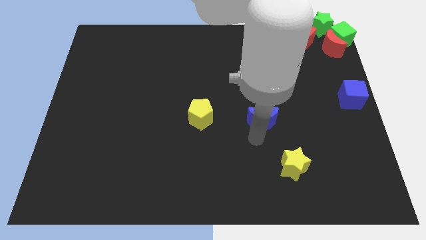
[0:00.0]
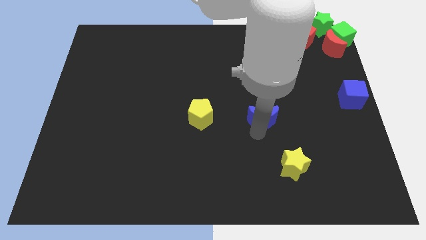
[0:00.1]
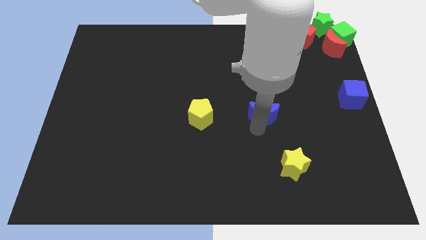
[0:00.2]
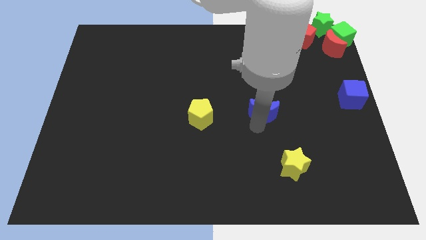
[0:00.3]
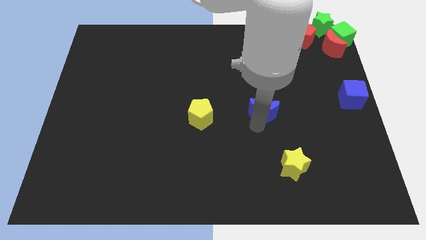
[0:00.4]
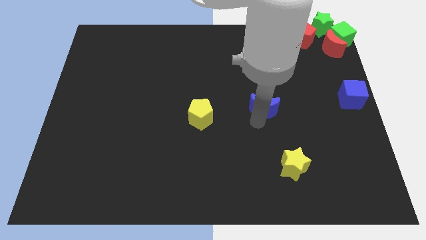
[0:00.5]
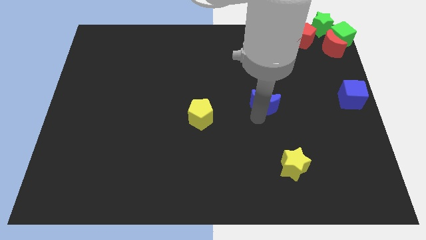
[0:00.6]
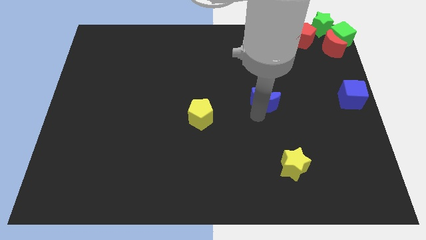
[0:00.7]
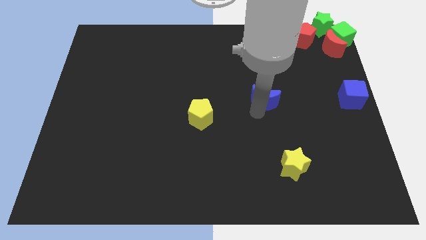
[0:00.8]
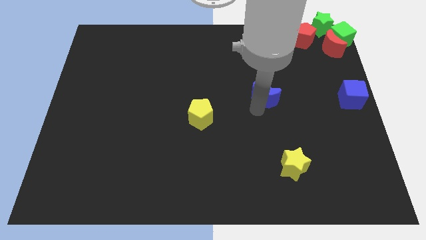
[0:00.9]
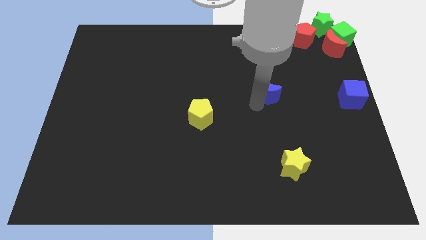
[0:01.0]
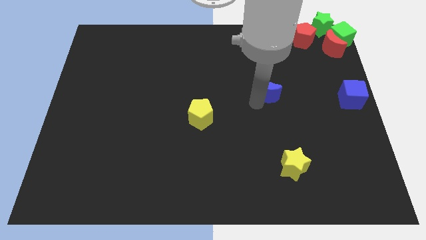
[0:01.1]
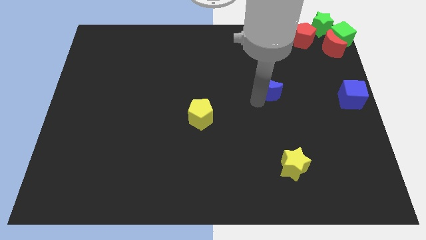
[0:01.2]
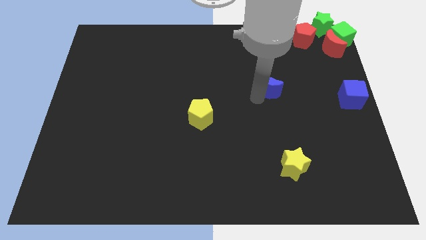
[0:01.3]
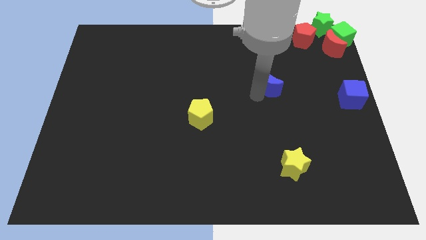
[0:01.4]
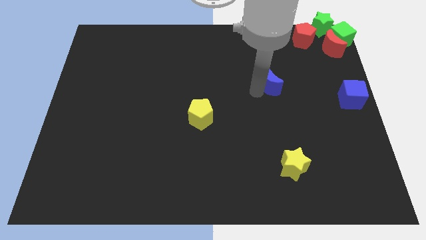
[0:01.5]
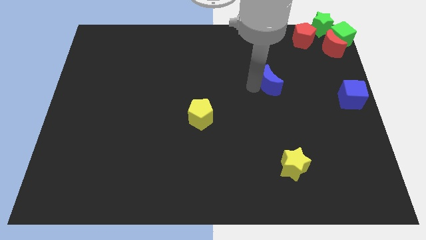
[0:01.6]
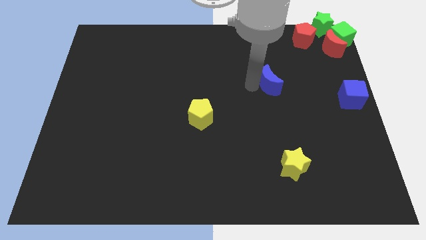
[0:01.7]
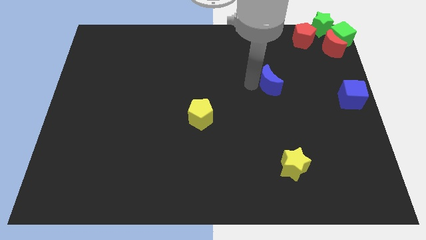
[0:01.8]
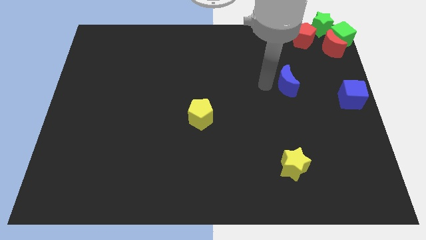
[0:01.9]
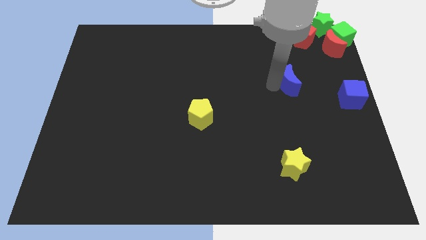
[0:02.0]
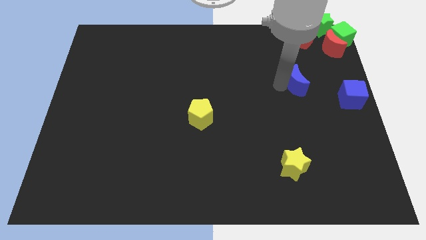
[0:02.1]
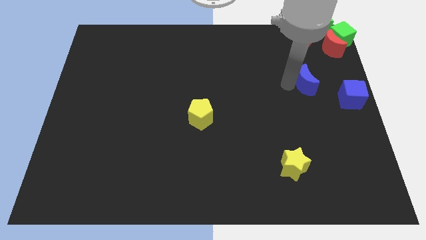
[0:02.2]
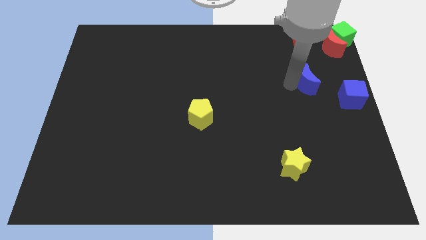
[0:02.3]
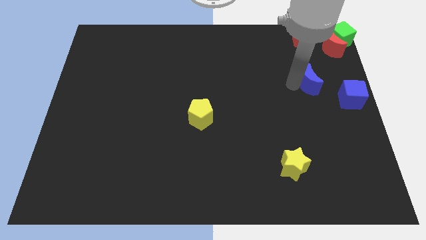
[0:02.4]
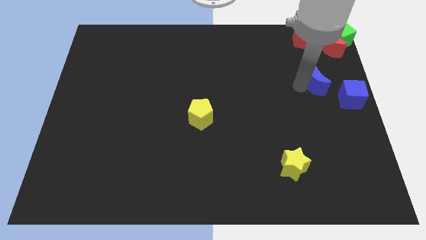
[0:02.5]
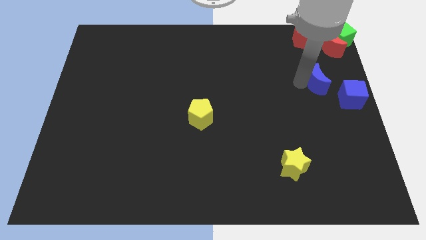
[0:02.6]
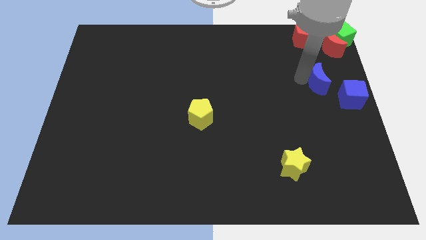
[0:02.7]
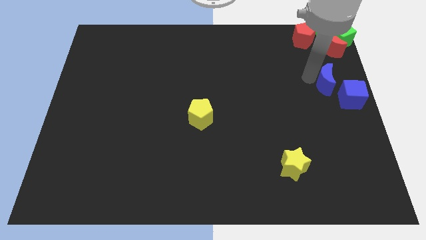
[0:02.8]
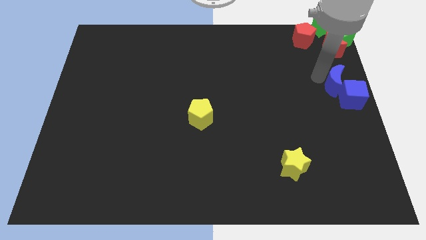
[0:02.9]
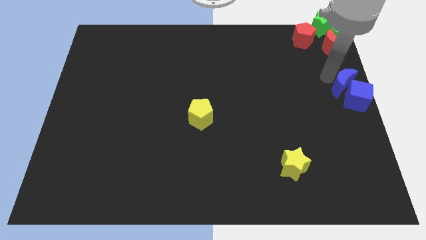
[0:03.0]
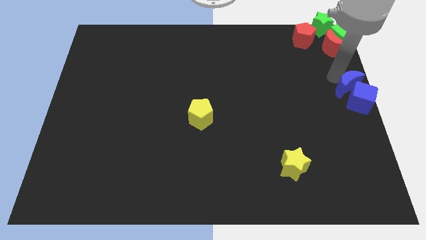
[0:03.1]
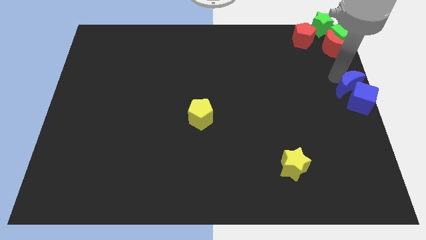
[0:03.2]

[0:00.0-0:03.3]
place blue crescent above the blue cube

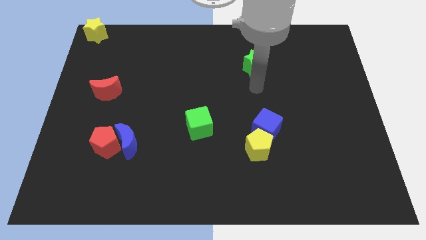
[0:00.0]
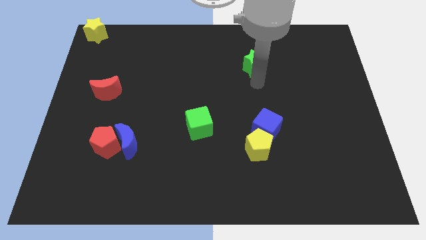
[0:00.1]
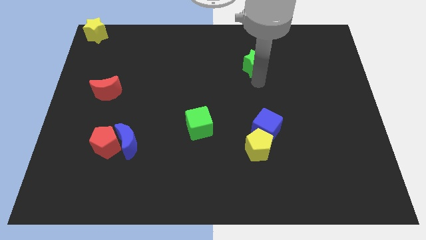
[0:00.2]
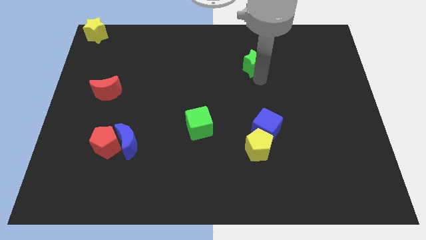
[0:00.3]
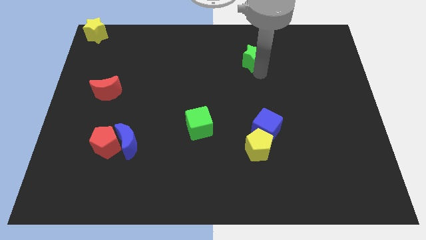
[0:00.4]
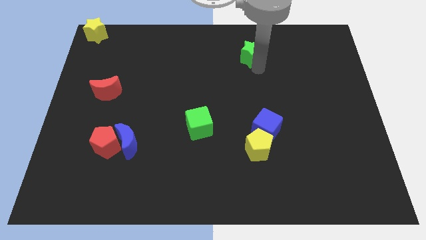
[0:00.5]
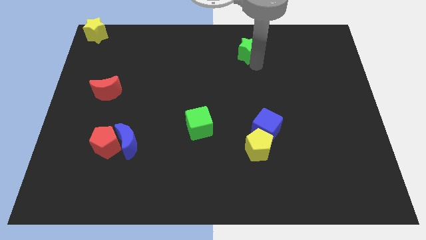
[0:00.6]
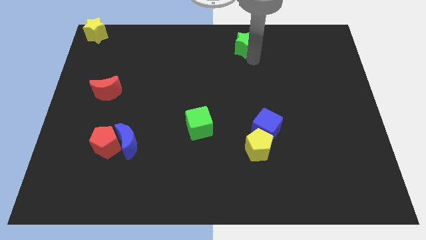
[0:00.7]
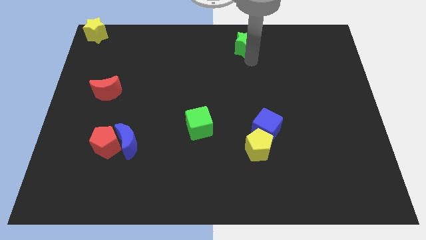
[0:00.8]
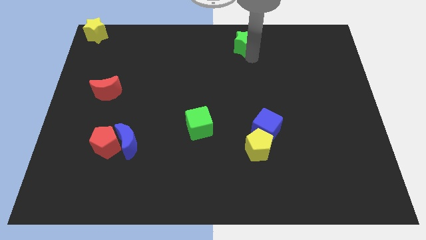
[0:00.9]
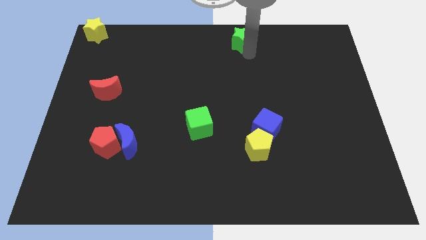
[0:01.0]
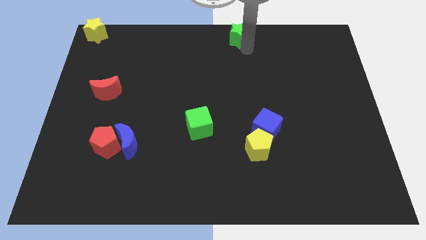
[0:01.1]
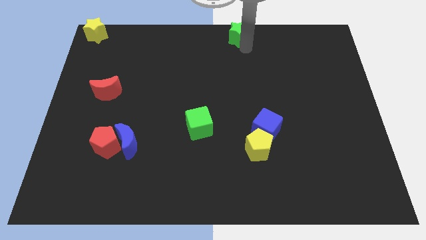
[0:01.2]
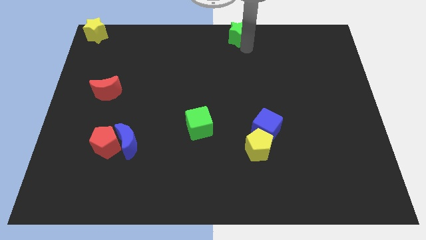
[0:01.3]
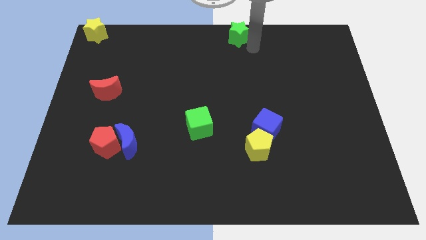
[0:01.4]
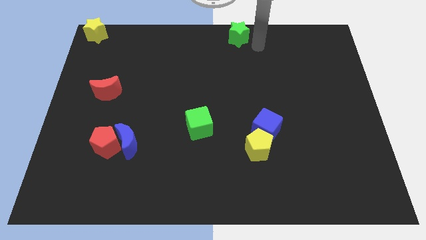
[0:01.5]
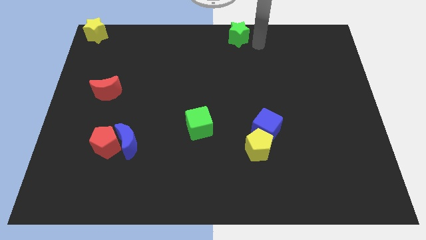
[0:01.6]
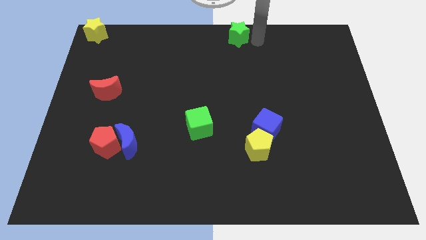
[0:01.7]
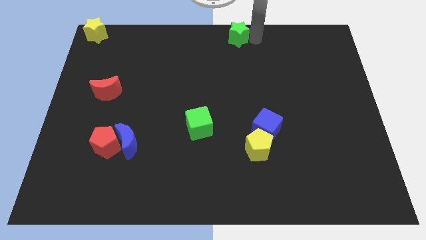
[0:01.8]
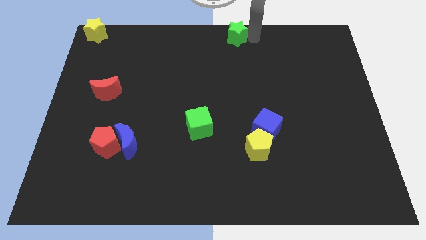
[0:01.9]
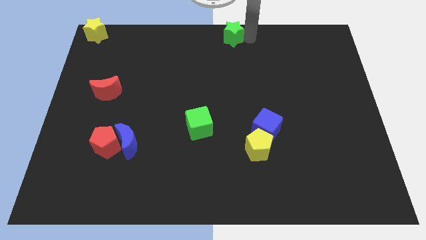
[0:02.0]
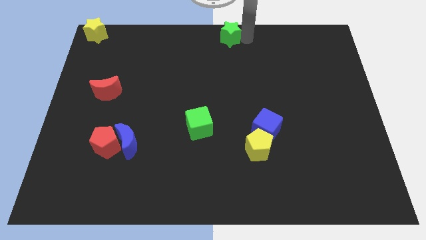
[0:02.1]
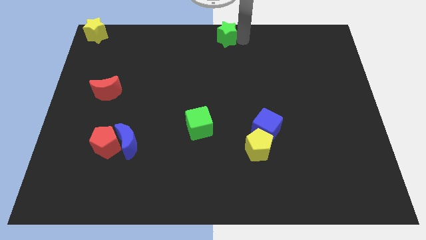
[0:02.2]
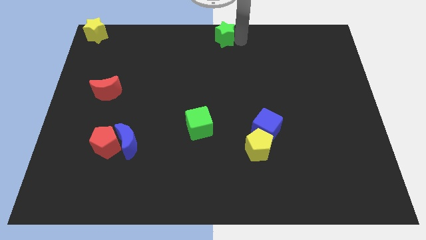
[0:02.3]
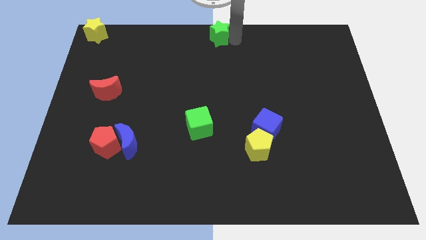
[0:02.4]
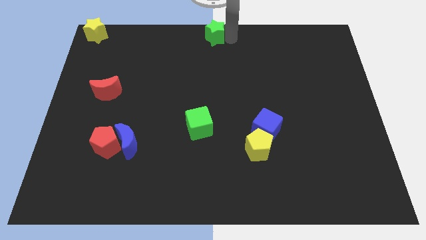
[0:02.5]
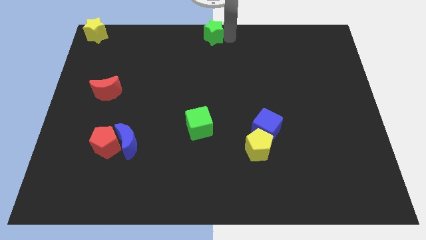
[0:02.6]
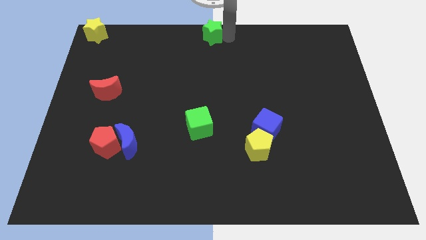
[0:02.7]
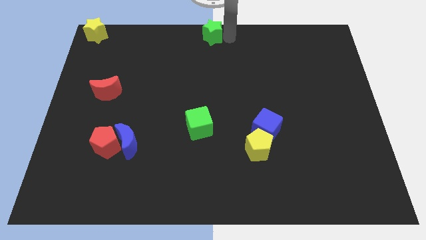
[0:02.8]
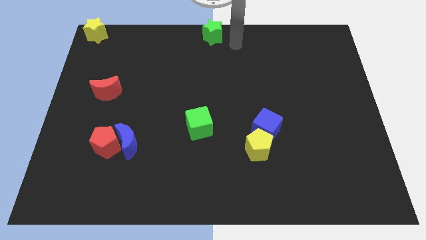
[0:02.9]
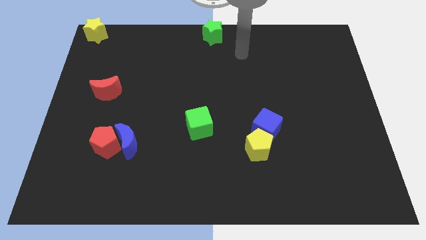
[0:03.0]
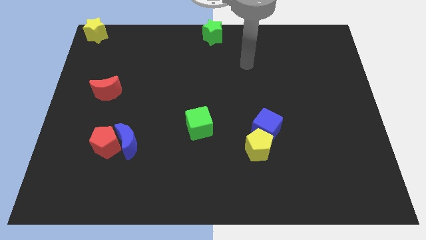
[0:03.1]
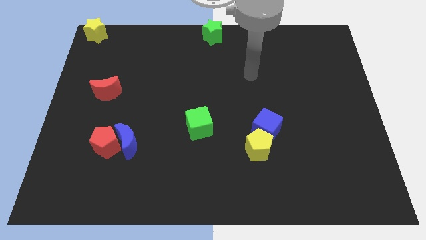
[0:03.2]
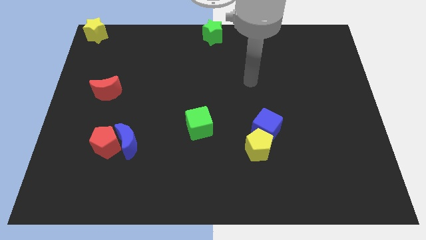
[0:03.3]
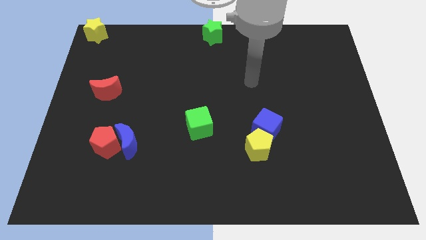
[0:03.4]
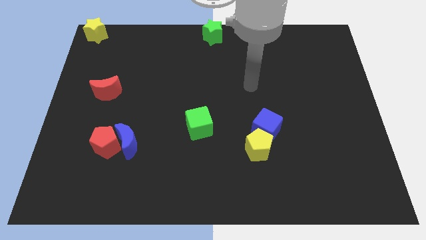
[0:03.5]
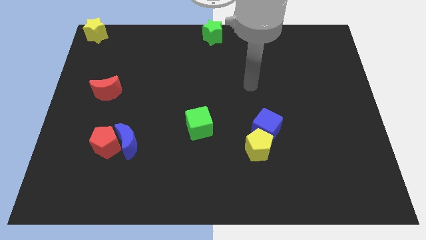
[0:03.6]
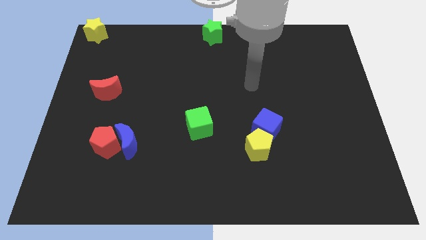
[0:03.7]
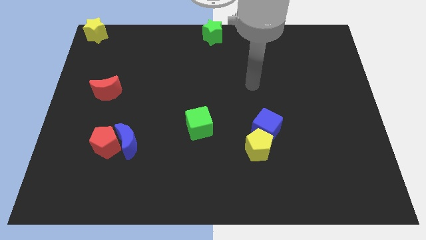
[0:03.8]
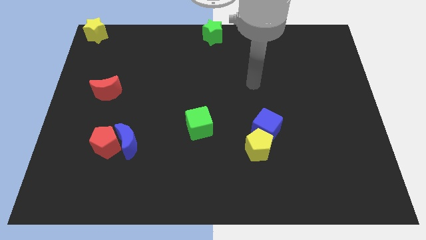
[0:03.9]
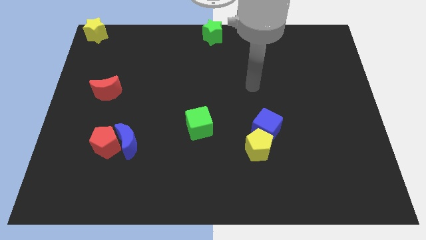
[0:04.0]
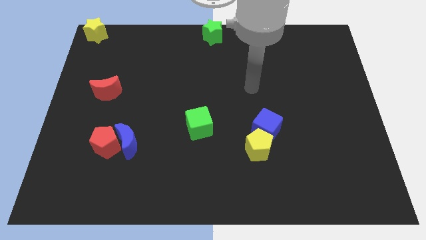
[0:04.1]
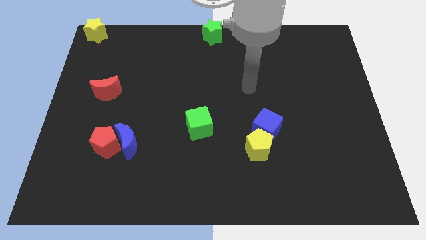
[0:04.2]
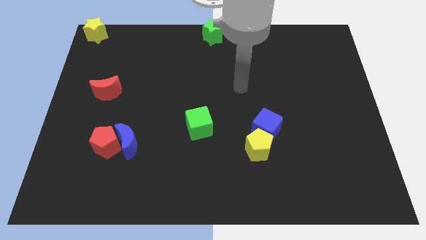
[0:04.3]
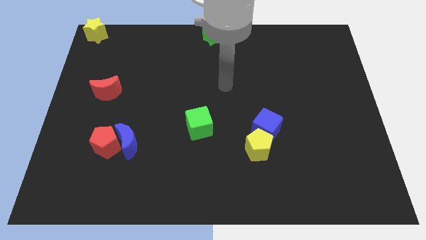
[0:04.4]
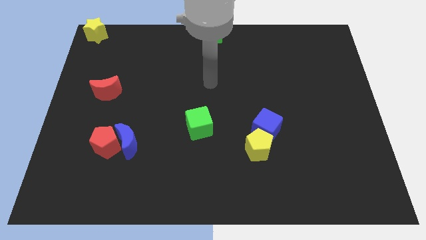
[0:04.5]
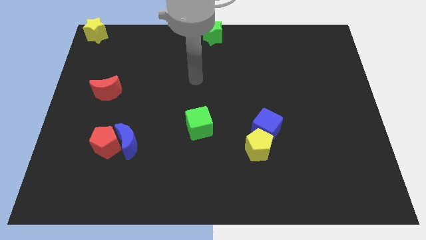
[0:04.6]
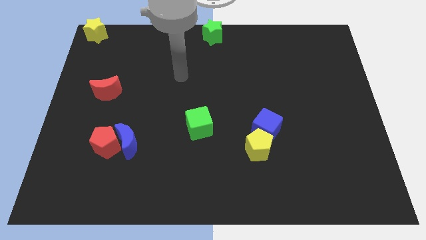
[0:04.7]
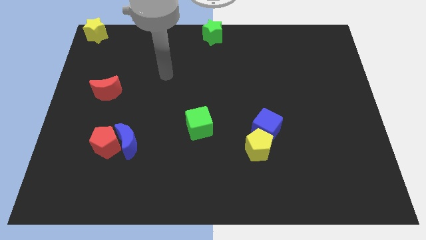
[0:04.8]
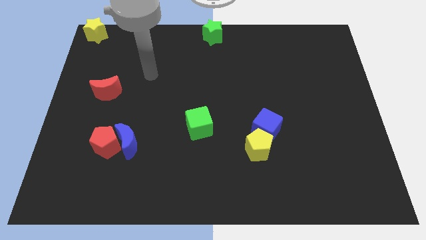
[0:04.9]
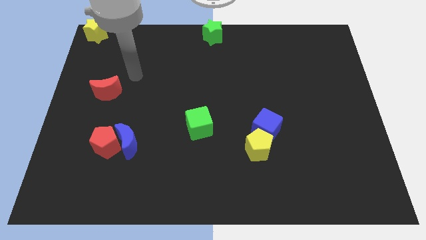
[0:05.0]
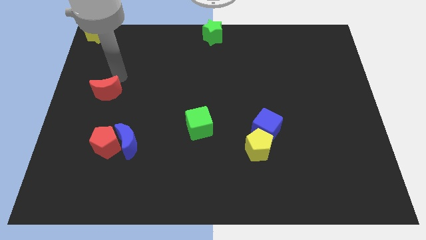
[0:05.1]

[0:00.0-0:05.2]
place the green star at the top center of the board

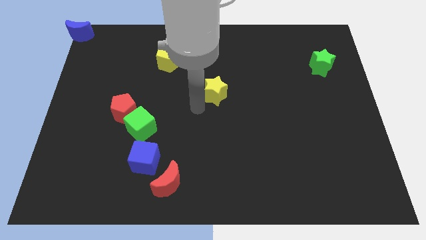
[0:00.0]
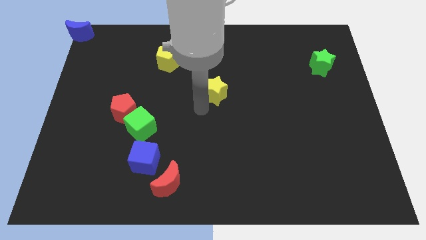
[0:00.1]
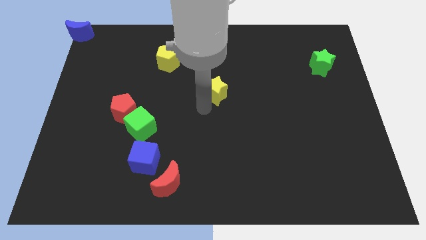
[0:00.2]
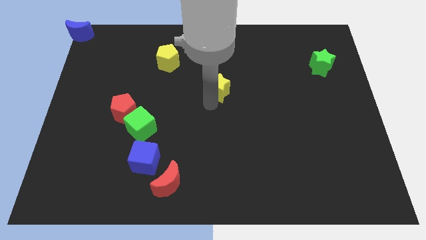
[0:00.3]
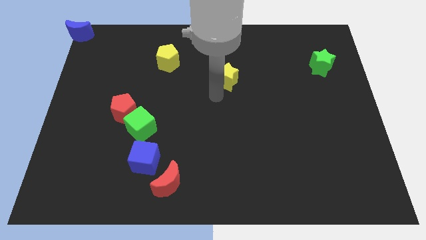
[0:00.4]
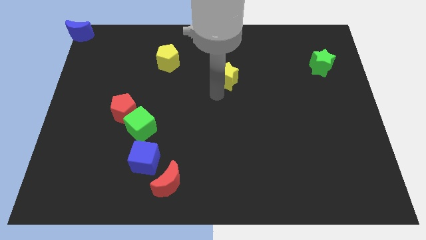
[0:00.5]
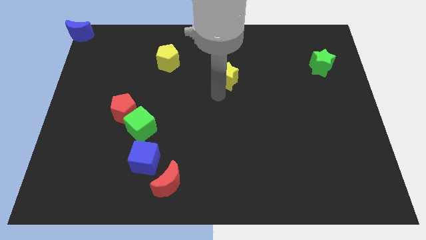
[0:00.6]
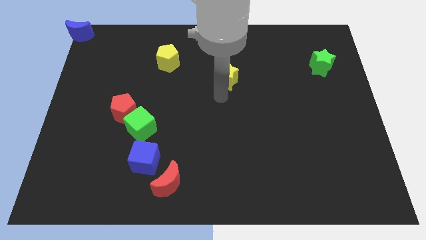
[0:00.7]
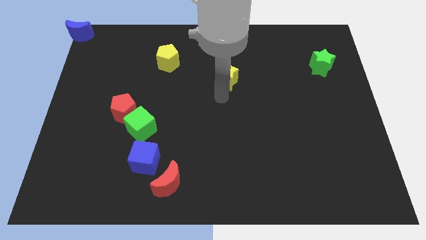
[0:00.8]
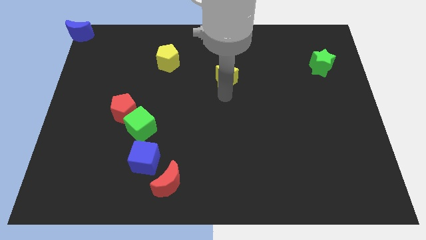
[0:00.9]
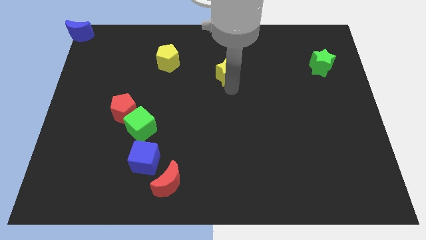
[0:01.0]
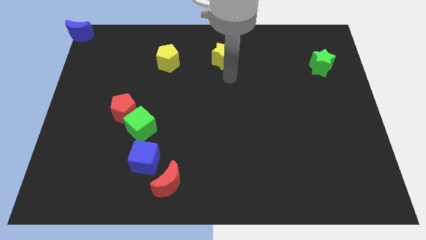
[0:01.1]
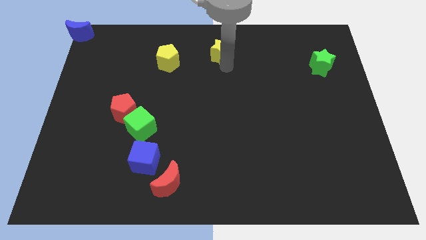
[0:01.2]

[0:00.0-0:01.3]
push the yellow star towards the top side of the board
